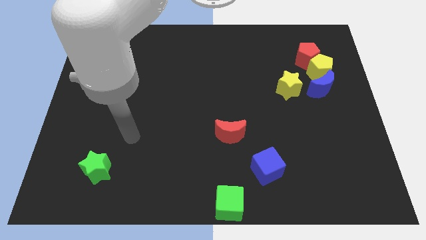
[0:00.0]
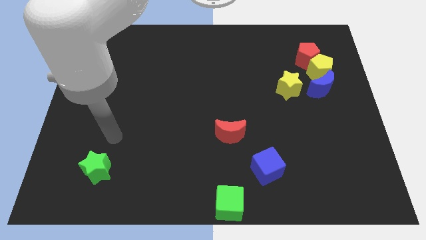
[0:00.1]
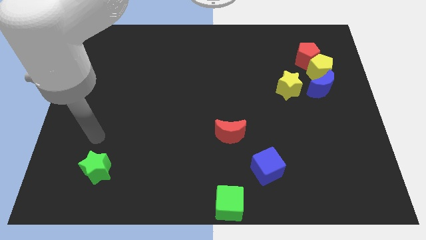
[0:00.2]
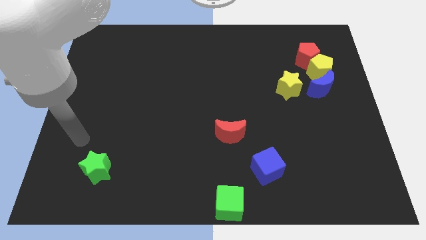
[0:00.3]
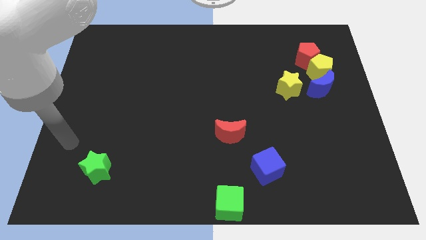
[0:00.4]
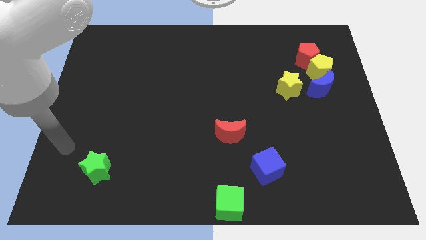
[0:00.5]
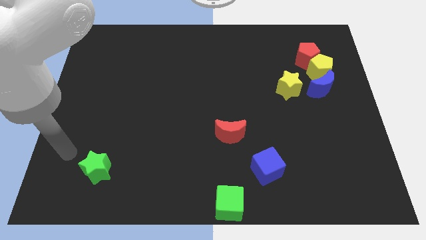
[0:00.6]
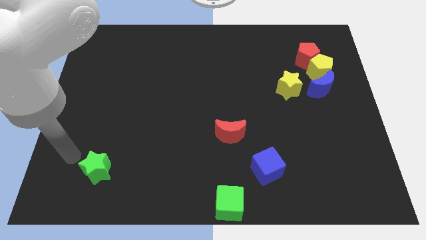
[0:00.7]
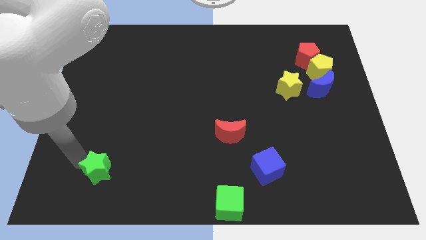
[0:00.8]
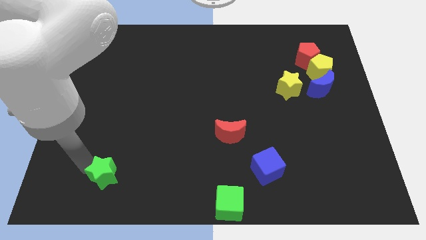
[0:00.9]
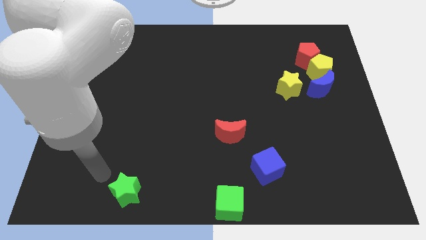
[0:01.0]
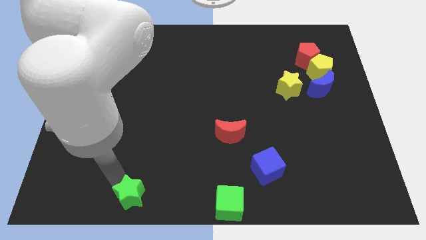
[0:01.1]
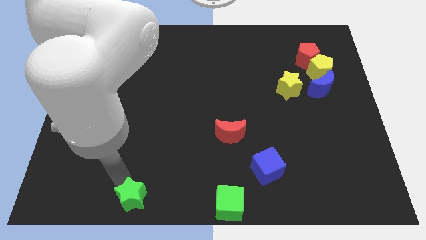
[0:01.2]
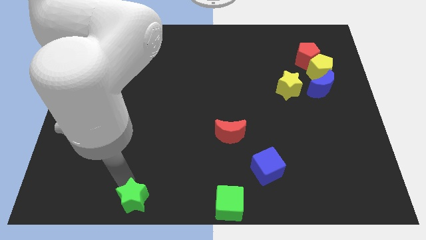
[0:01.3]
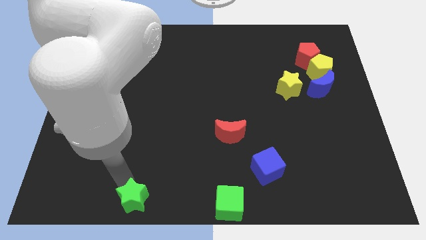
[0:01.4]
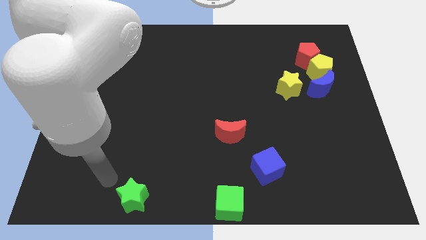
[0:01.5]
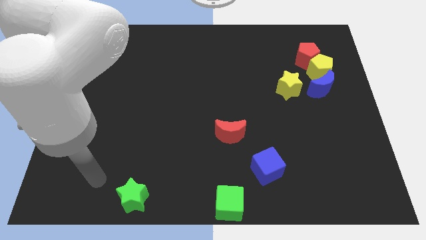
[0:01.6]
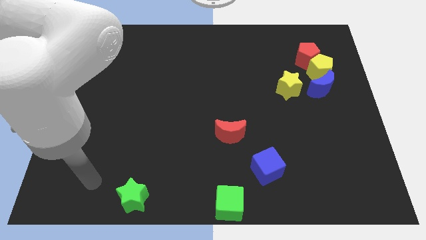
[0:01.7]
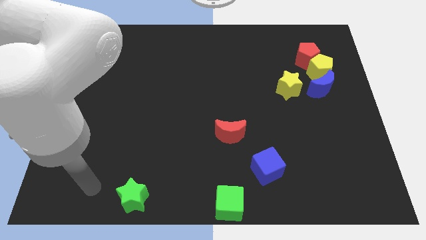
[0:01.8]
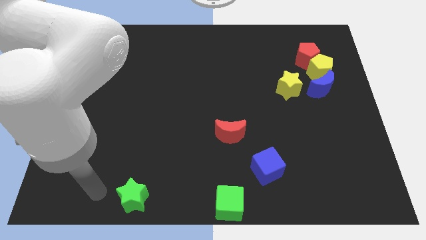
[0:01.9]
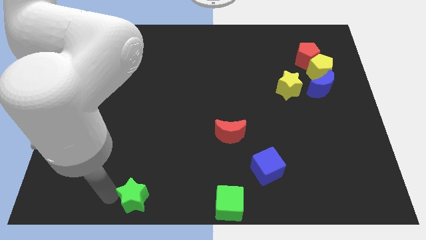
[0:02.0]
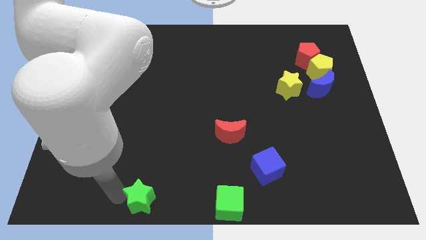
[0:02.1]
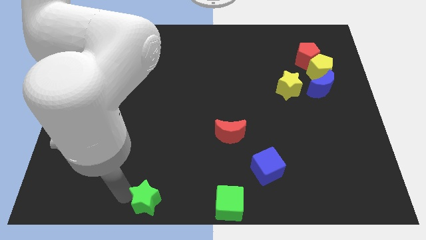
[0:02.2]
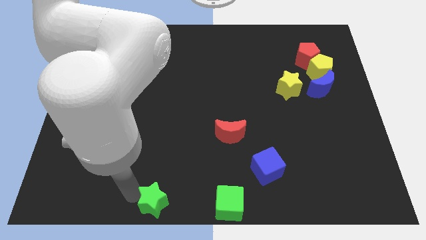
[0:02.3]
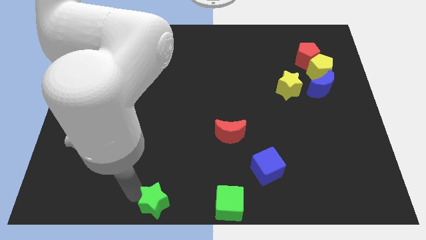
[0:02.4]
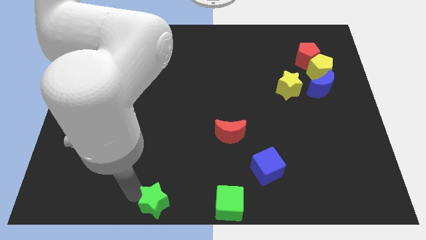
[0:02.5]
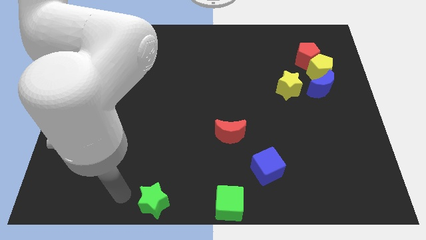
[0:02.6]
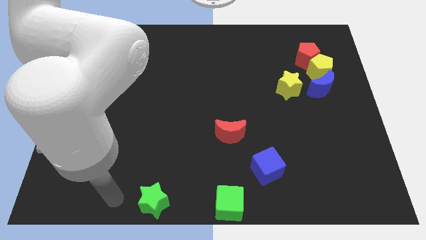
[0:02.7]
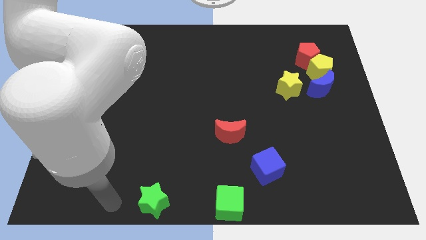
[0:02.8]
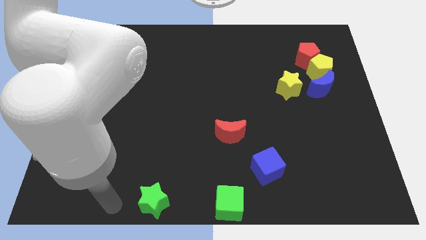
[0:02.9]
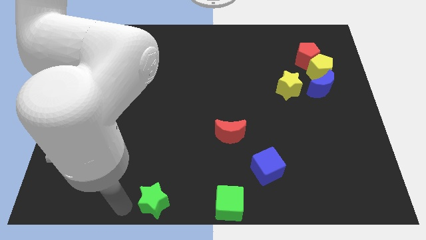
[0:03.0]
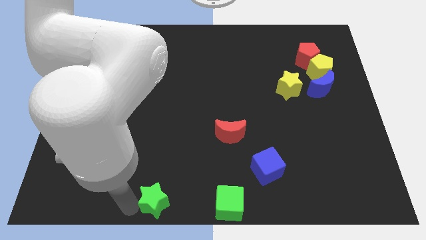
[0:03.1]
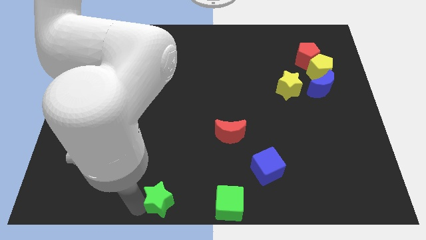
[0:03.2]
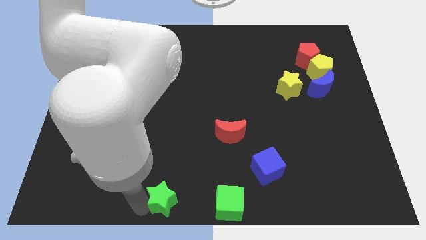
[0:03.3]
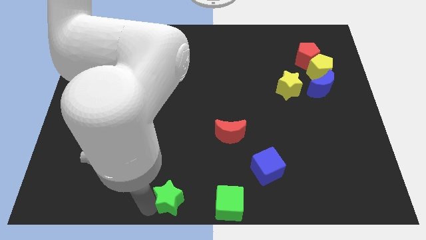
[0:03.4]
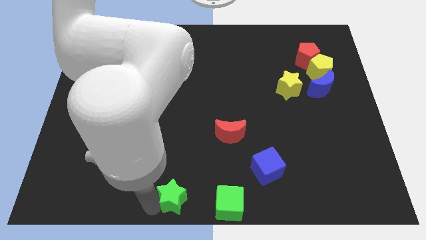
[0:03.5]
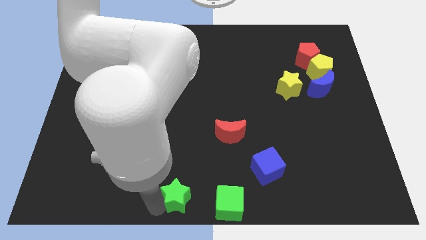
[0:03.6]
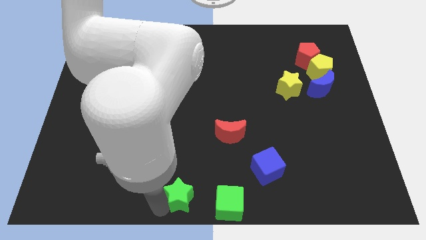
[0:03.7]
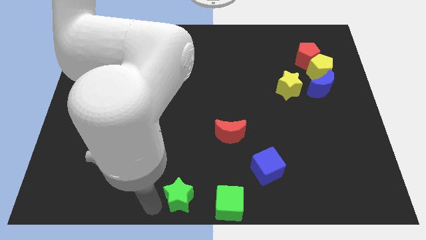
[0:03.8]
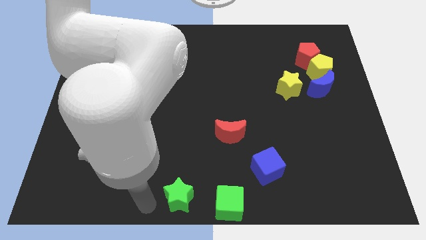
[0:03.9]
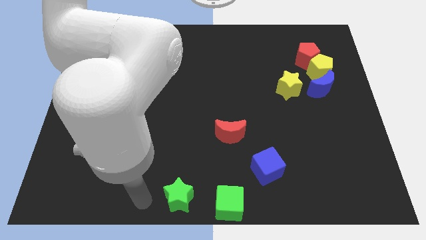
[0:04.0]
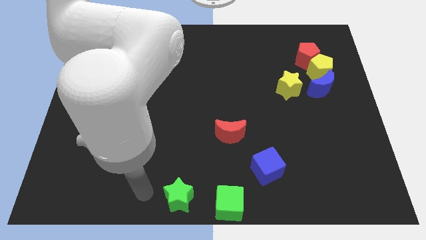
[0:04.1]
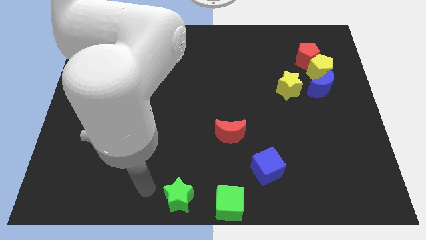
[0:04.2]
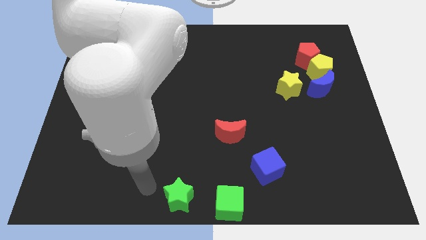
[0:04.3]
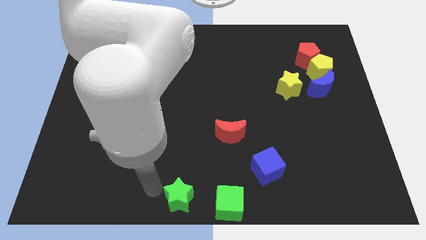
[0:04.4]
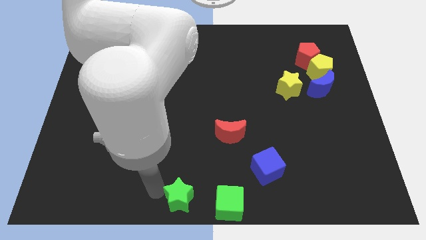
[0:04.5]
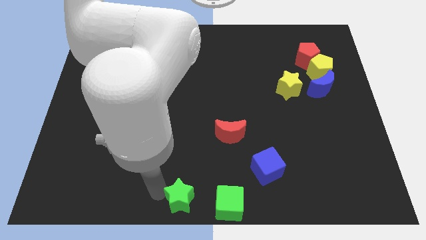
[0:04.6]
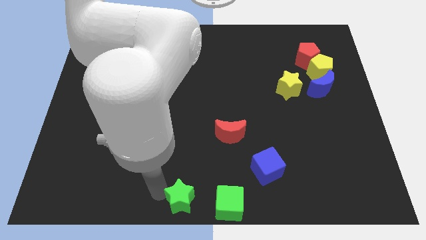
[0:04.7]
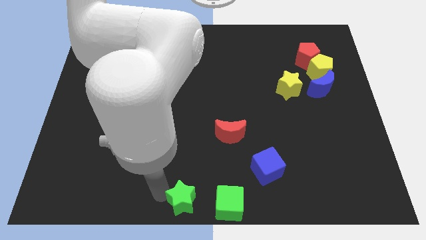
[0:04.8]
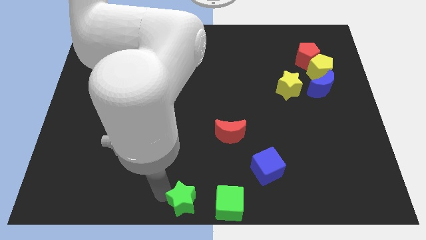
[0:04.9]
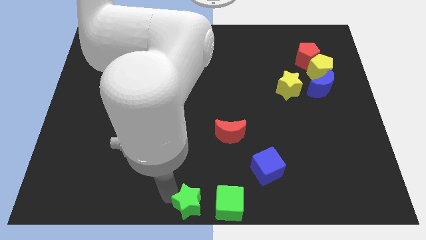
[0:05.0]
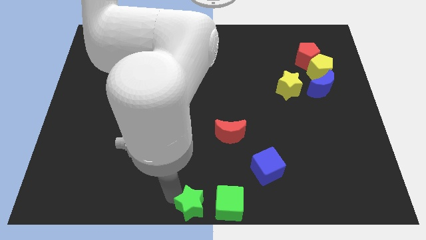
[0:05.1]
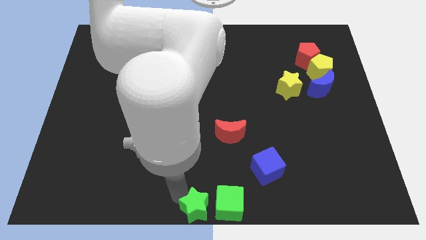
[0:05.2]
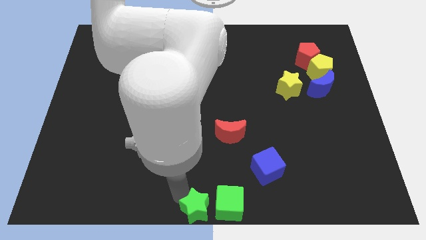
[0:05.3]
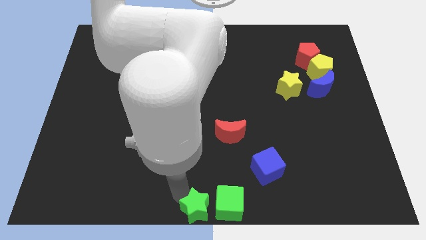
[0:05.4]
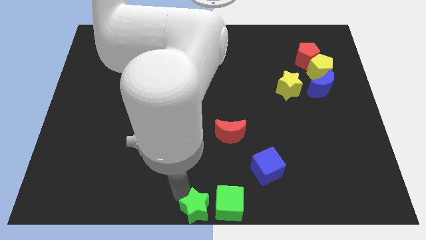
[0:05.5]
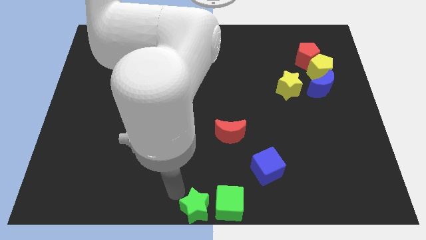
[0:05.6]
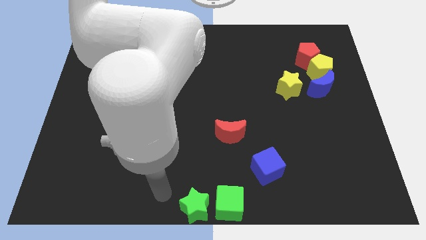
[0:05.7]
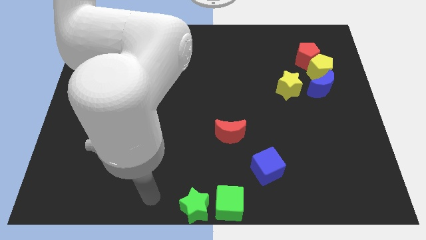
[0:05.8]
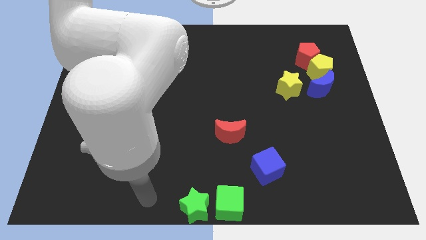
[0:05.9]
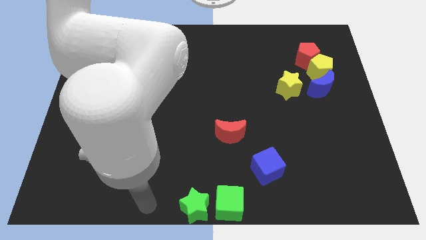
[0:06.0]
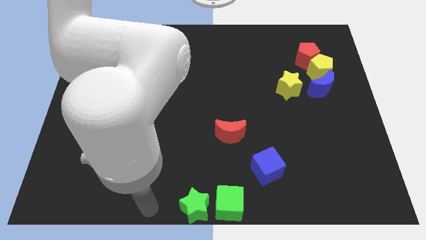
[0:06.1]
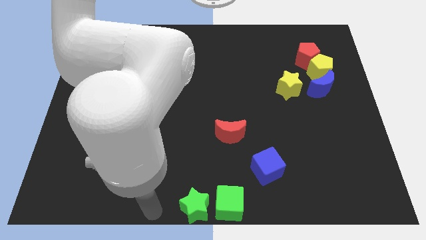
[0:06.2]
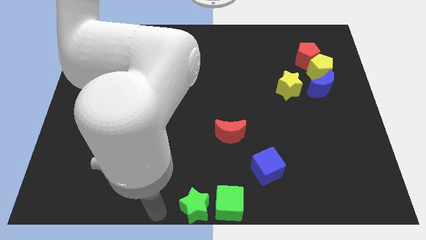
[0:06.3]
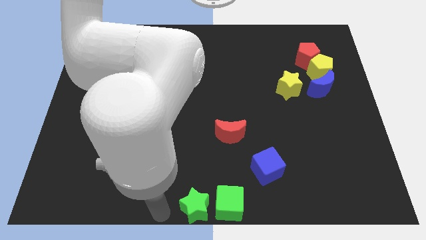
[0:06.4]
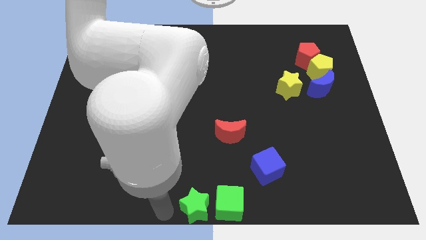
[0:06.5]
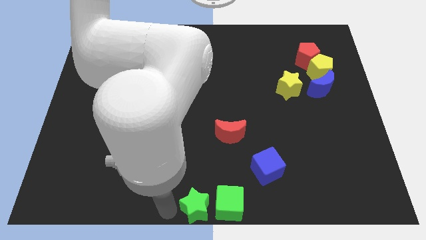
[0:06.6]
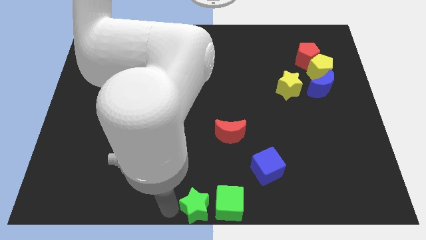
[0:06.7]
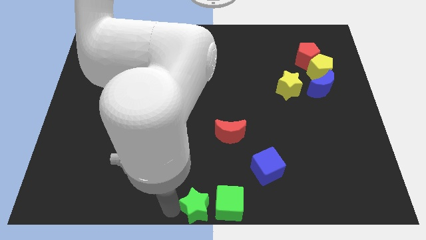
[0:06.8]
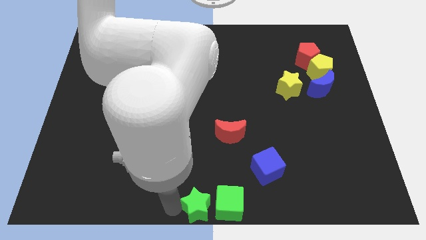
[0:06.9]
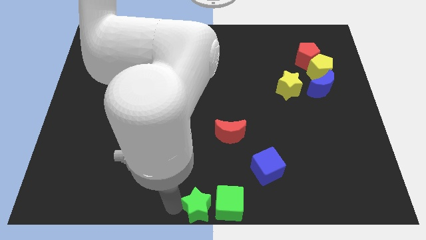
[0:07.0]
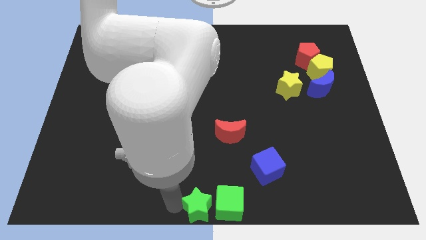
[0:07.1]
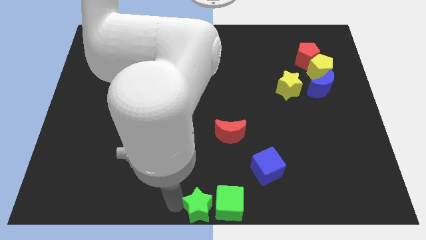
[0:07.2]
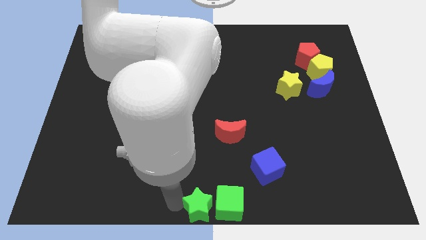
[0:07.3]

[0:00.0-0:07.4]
place green star to the left side of green cube

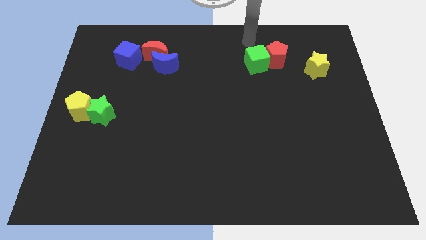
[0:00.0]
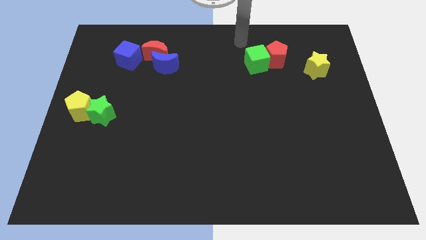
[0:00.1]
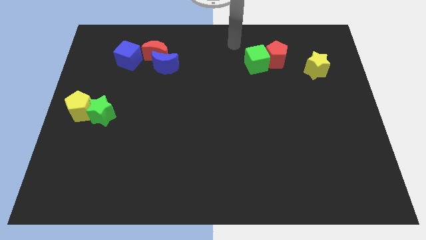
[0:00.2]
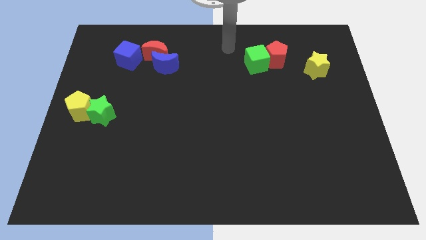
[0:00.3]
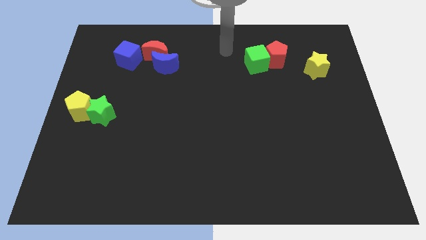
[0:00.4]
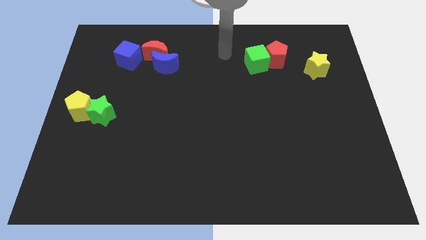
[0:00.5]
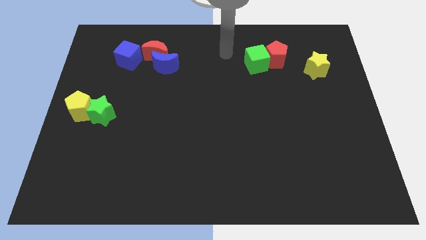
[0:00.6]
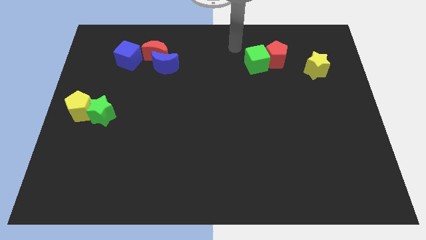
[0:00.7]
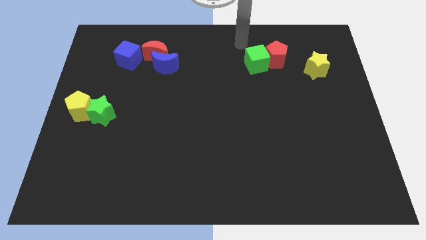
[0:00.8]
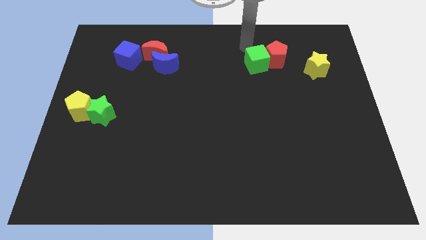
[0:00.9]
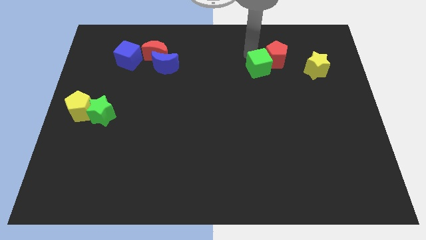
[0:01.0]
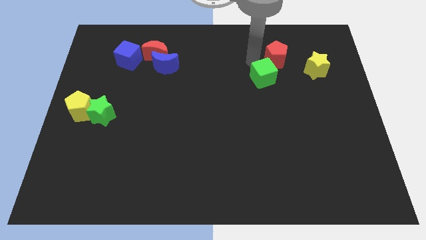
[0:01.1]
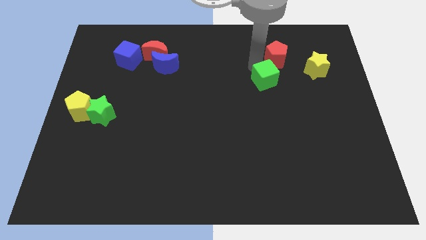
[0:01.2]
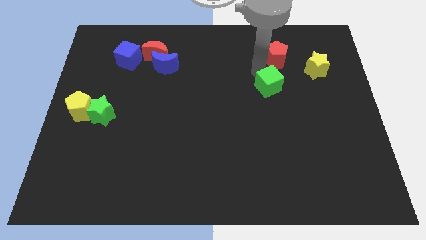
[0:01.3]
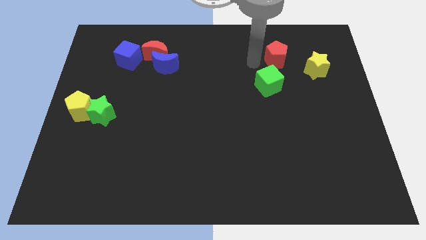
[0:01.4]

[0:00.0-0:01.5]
put the green cube diagonally bottom left to the yellow star
